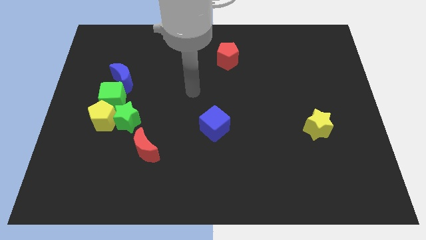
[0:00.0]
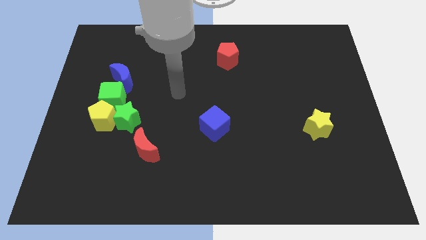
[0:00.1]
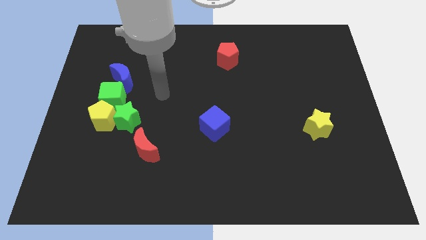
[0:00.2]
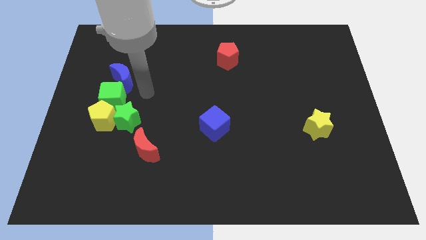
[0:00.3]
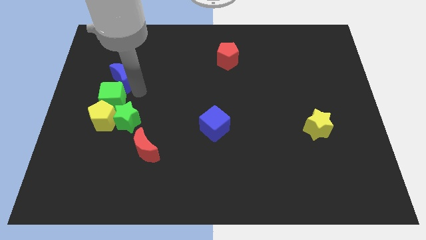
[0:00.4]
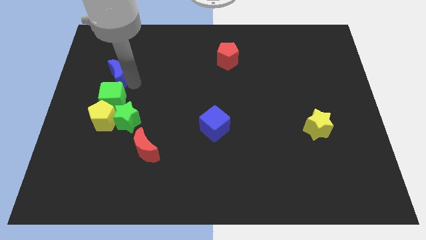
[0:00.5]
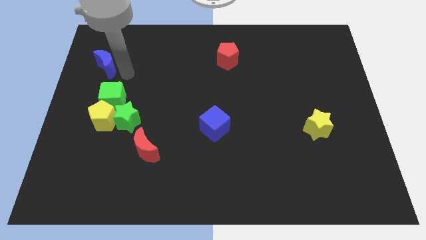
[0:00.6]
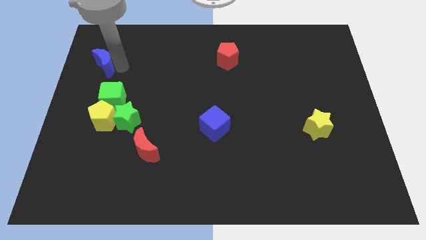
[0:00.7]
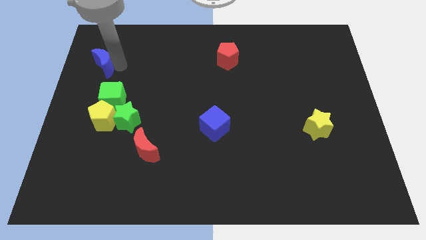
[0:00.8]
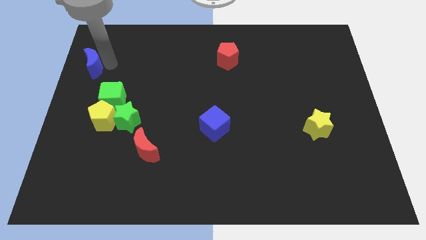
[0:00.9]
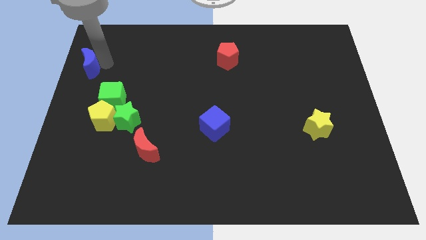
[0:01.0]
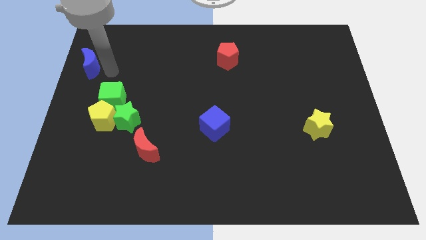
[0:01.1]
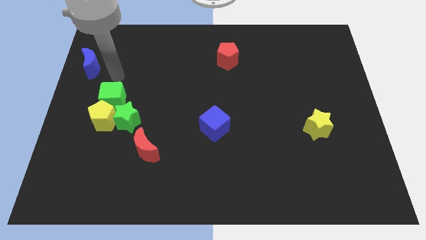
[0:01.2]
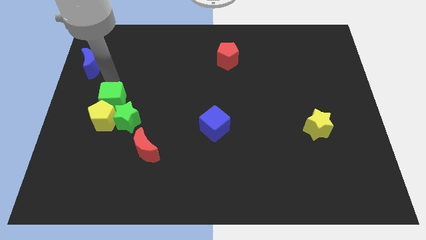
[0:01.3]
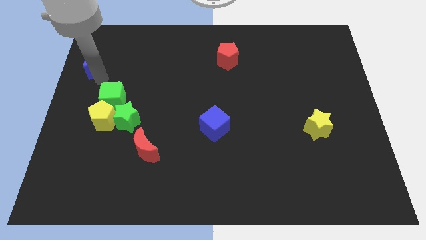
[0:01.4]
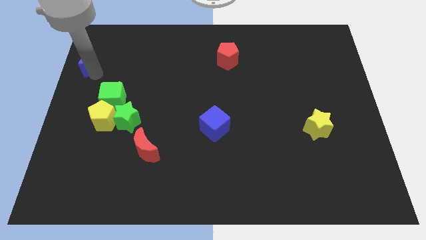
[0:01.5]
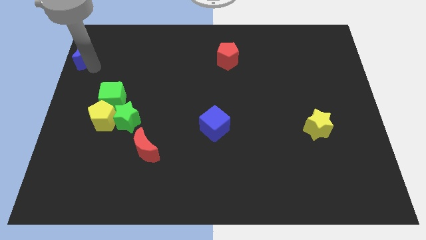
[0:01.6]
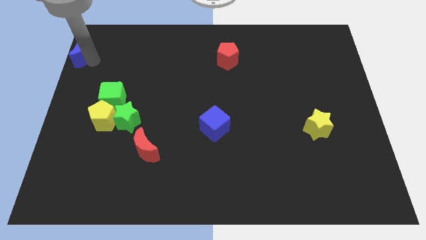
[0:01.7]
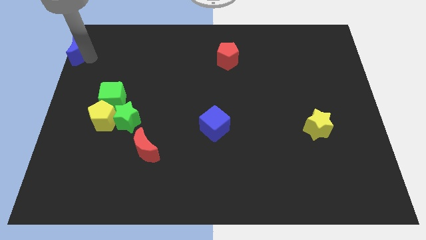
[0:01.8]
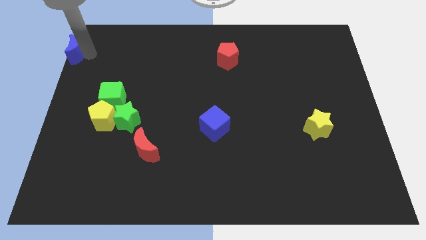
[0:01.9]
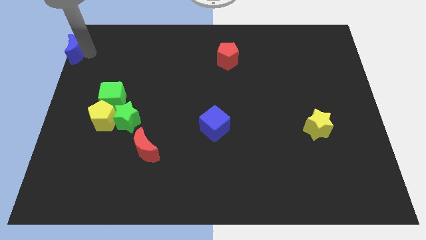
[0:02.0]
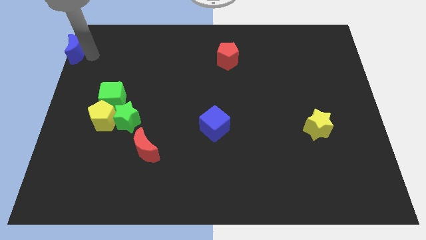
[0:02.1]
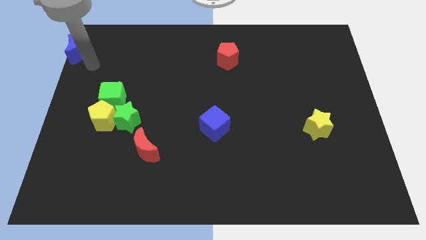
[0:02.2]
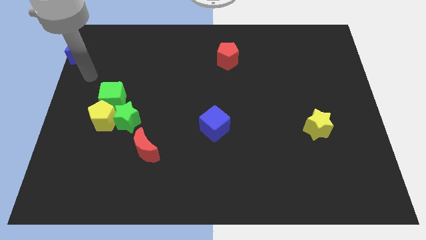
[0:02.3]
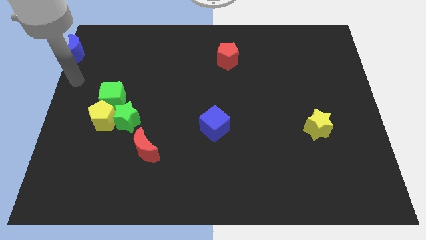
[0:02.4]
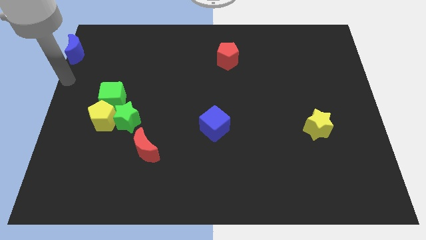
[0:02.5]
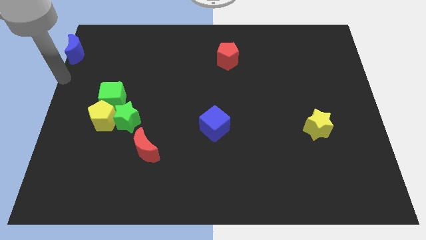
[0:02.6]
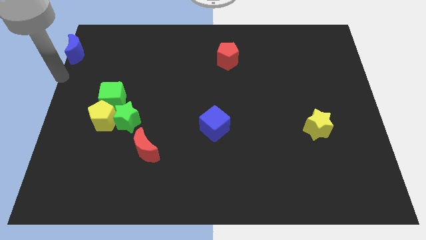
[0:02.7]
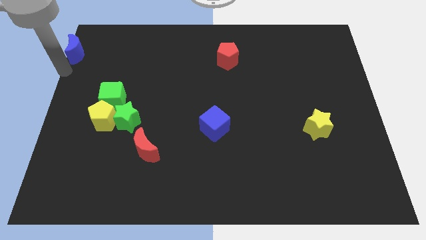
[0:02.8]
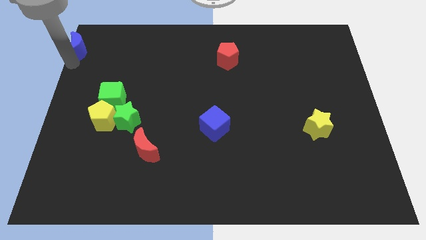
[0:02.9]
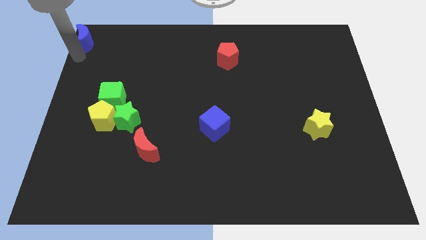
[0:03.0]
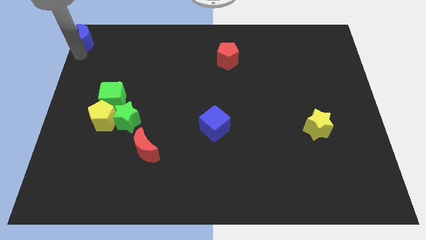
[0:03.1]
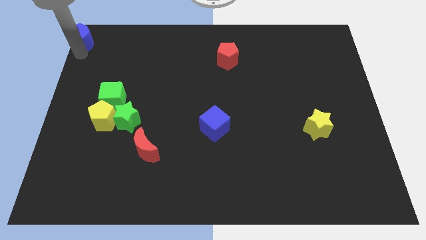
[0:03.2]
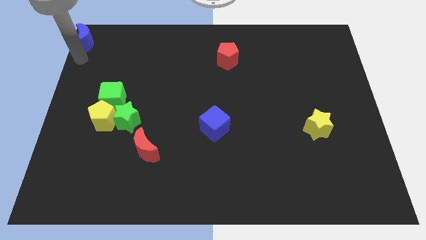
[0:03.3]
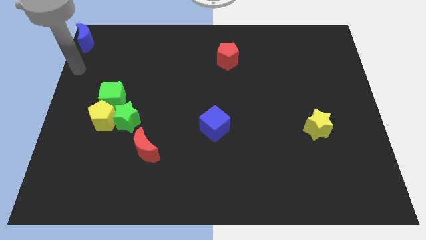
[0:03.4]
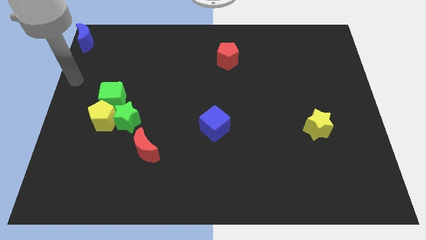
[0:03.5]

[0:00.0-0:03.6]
slide the blue moon towards the top left corner of the board

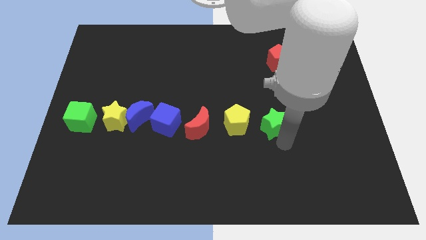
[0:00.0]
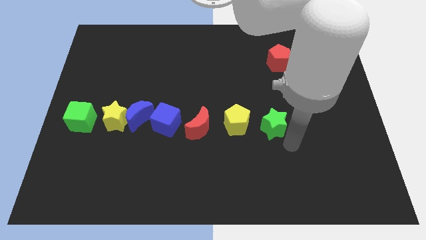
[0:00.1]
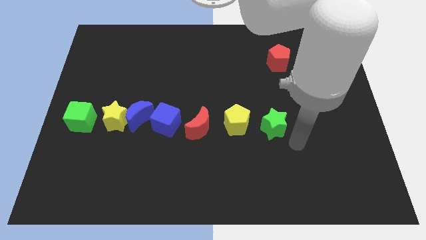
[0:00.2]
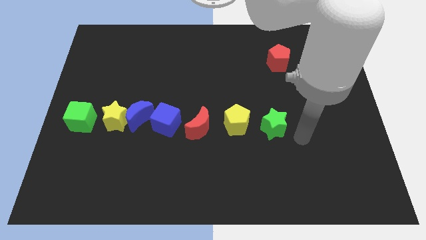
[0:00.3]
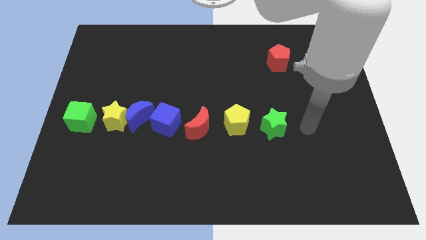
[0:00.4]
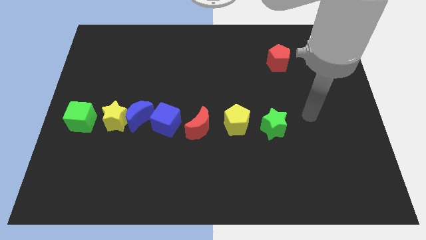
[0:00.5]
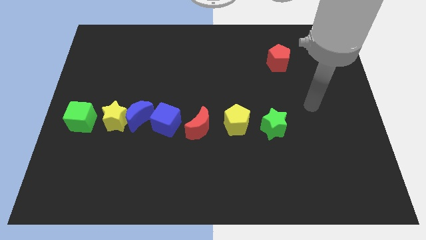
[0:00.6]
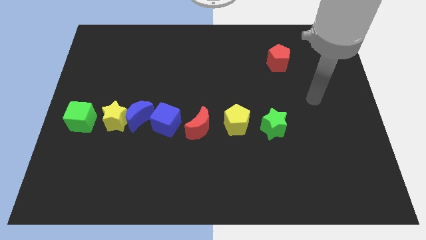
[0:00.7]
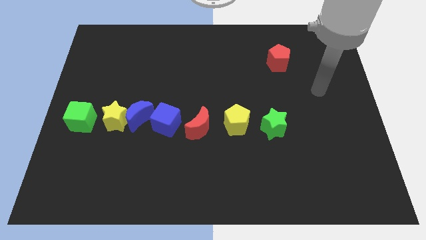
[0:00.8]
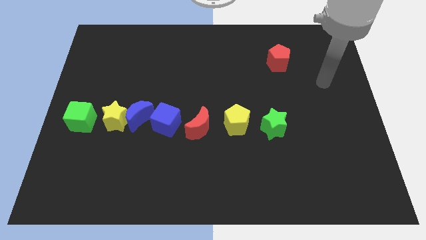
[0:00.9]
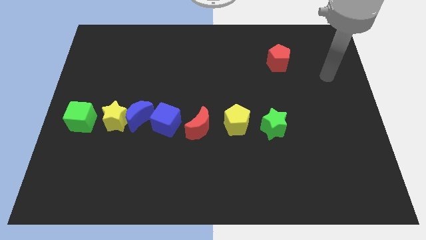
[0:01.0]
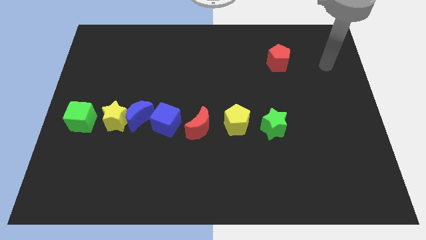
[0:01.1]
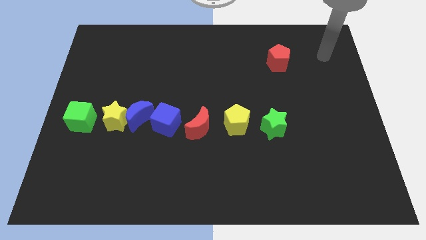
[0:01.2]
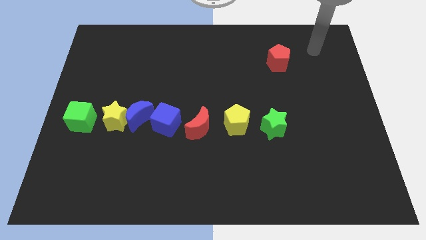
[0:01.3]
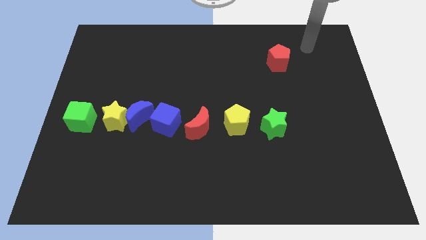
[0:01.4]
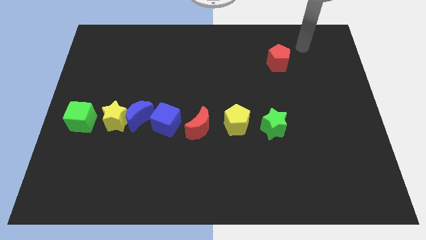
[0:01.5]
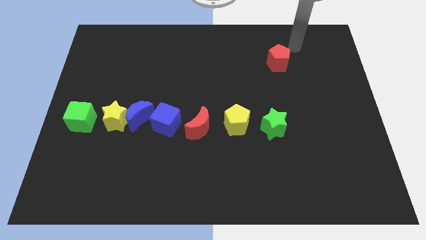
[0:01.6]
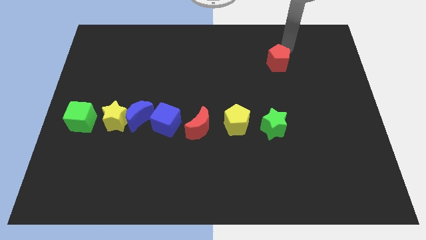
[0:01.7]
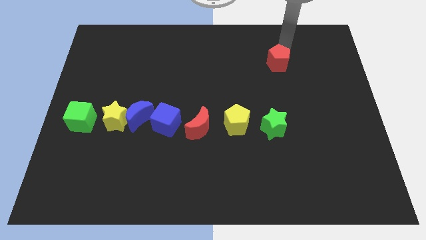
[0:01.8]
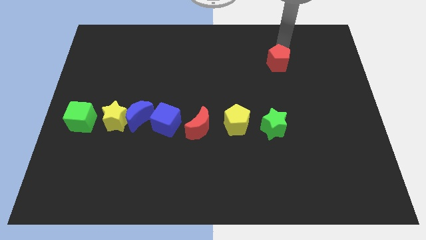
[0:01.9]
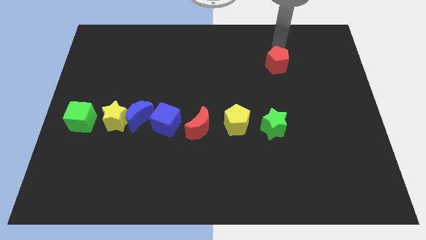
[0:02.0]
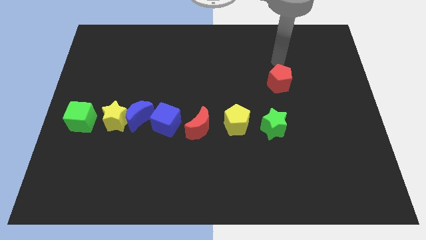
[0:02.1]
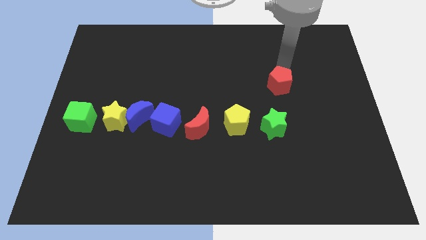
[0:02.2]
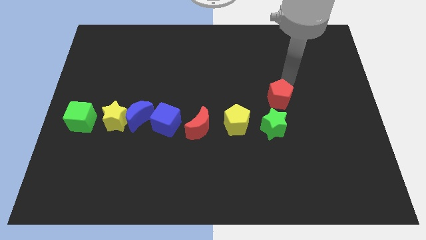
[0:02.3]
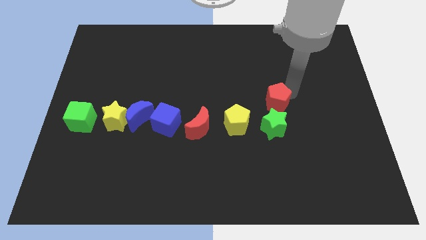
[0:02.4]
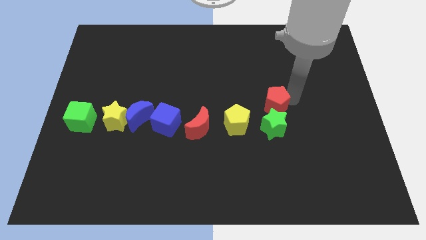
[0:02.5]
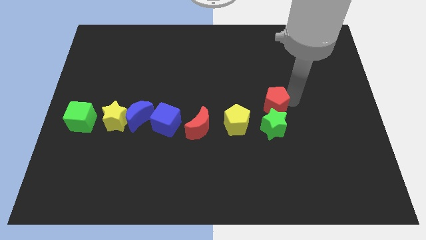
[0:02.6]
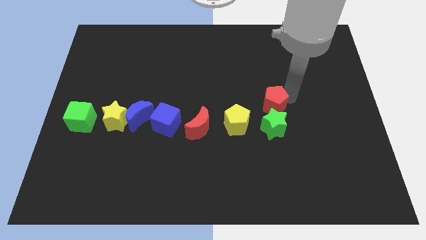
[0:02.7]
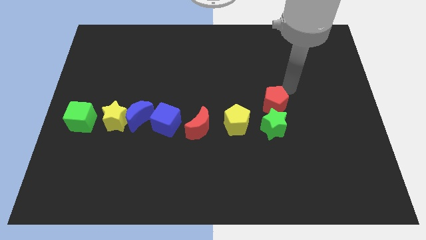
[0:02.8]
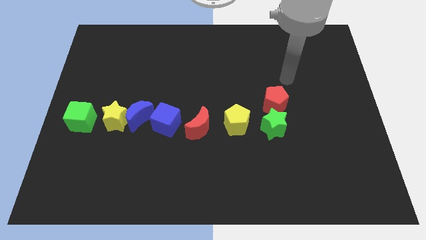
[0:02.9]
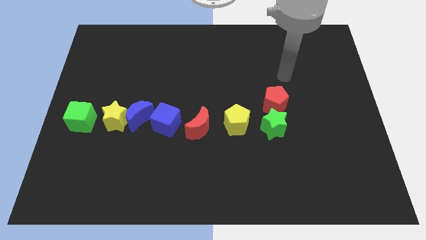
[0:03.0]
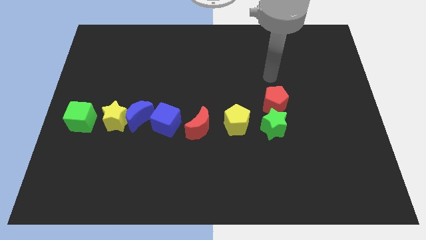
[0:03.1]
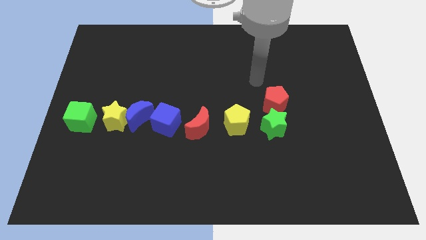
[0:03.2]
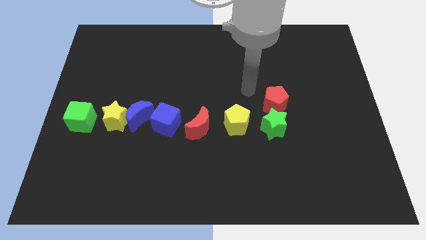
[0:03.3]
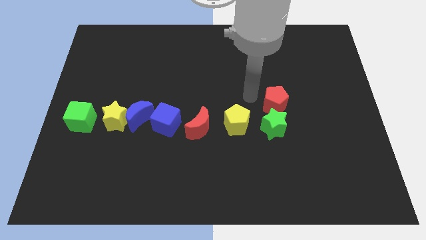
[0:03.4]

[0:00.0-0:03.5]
place the red pentgaon above the green star

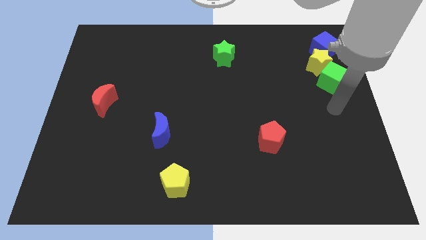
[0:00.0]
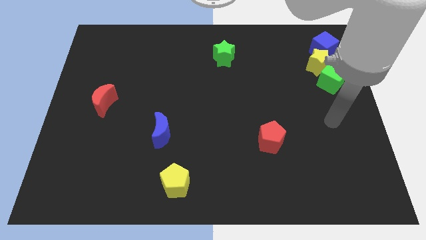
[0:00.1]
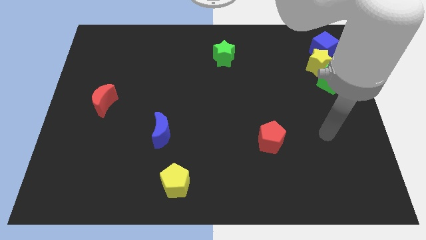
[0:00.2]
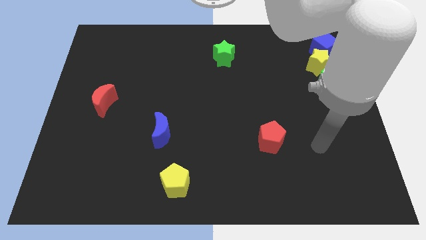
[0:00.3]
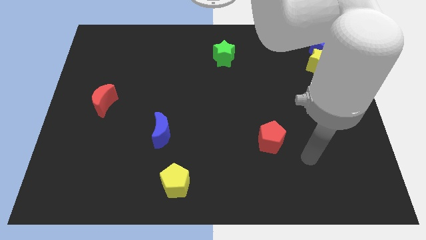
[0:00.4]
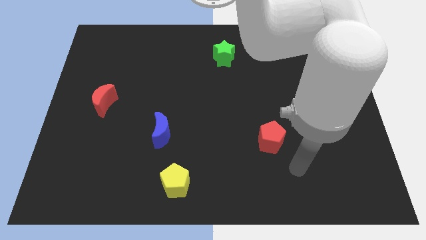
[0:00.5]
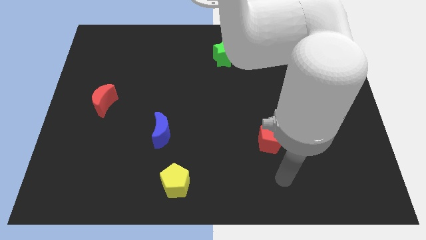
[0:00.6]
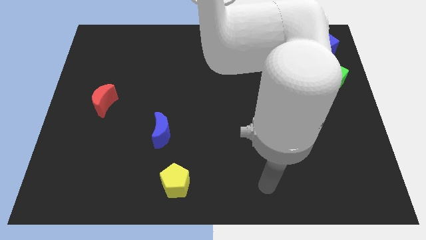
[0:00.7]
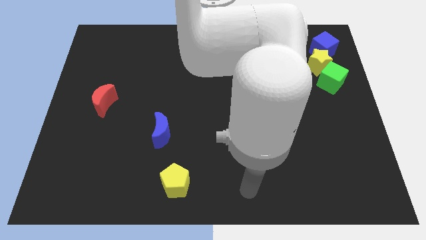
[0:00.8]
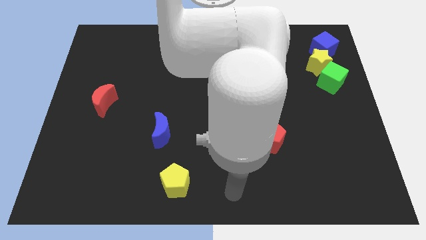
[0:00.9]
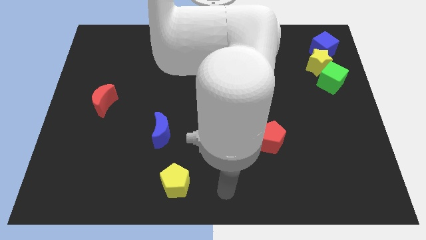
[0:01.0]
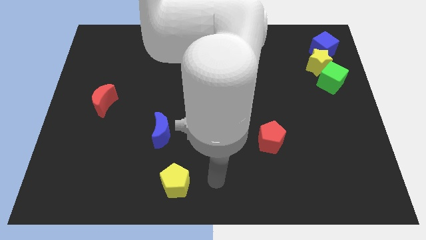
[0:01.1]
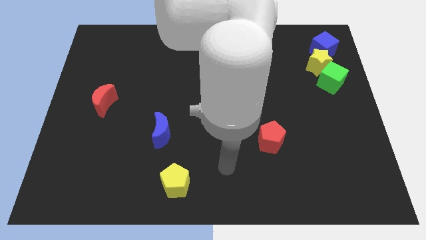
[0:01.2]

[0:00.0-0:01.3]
move your arm away from the green cube

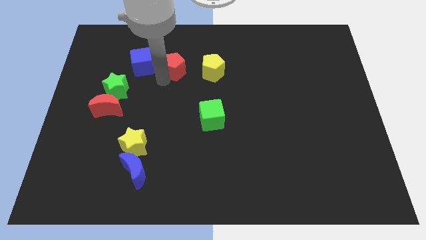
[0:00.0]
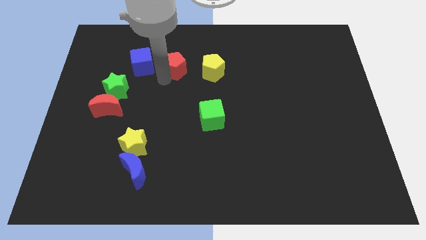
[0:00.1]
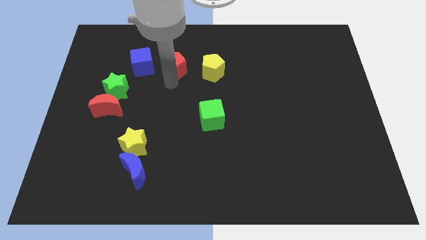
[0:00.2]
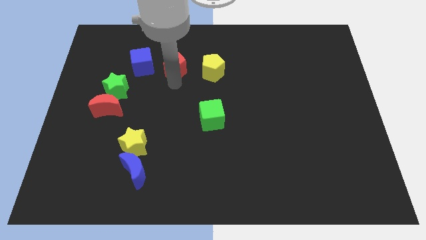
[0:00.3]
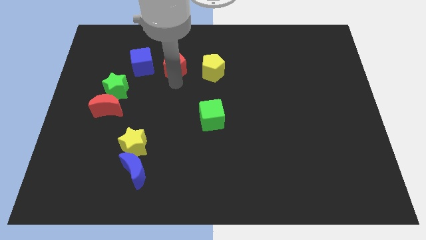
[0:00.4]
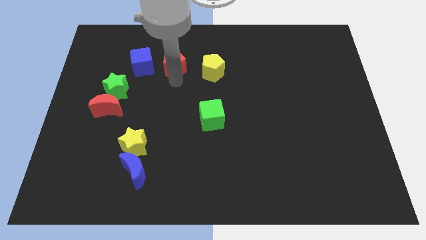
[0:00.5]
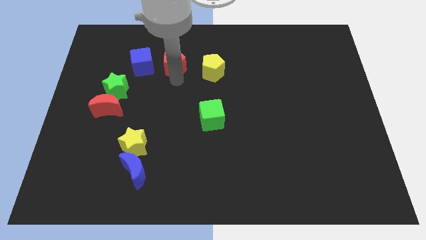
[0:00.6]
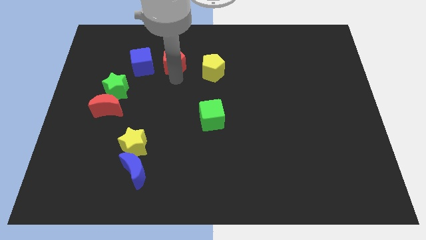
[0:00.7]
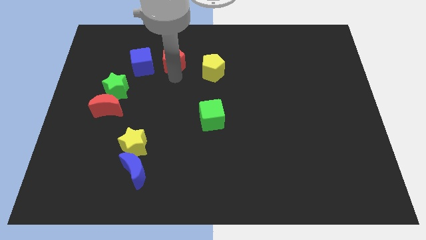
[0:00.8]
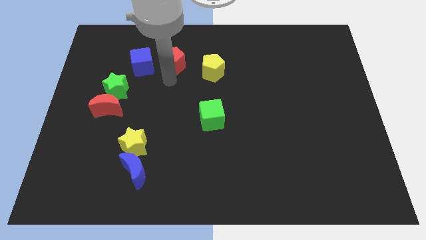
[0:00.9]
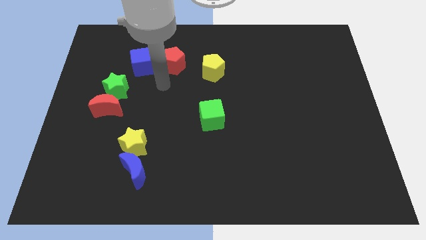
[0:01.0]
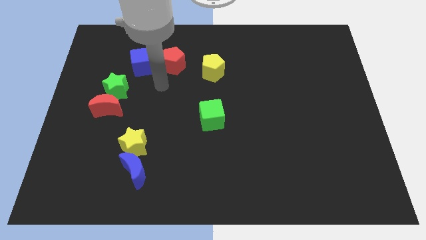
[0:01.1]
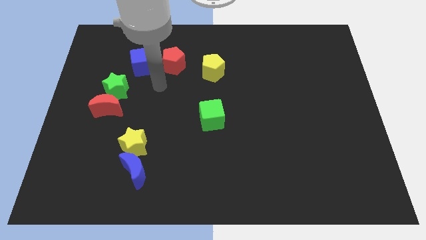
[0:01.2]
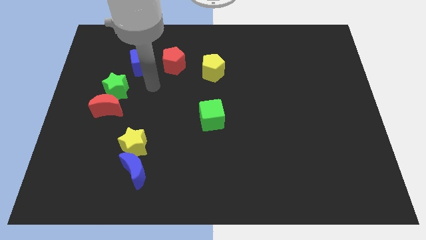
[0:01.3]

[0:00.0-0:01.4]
push the red pentagon to the right of the blue cube
